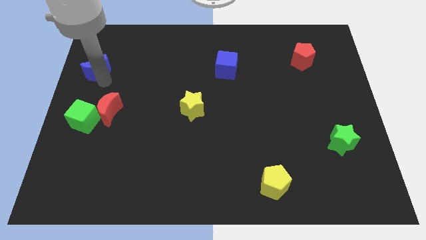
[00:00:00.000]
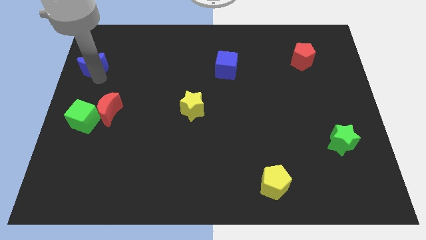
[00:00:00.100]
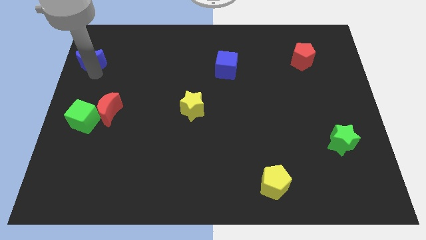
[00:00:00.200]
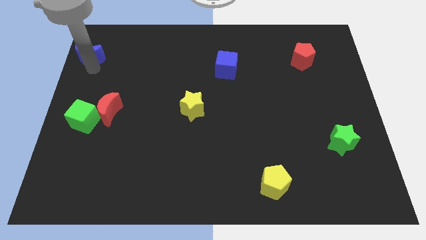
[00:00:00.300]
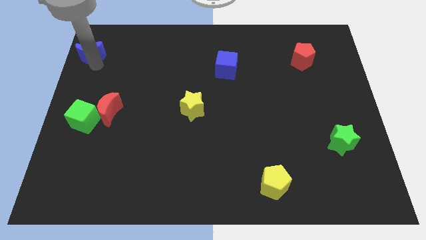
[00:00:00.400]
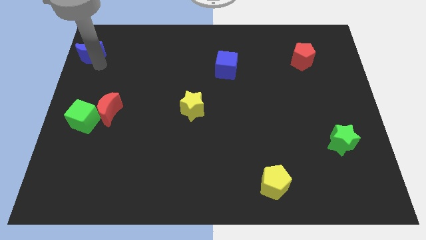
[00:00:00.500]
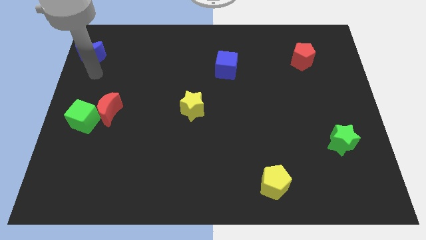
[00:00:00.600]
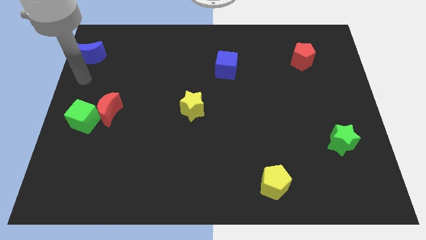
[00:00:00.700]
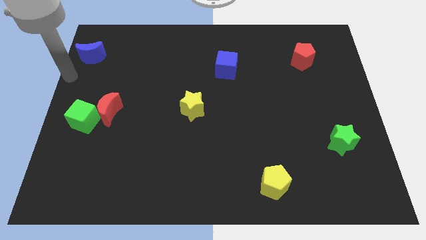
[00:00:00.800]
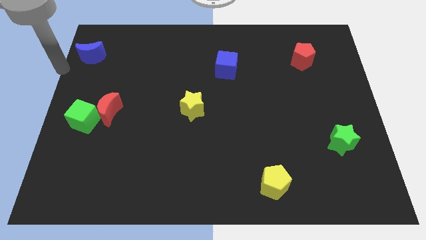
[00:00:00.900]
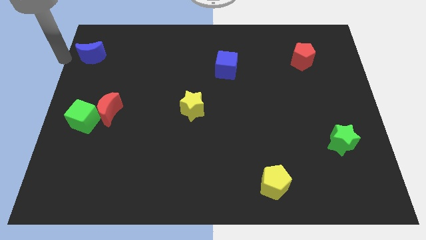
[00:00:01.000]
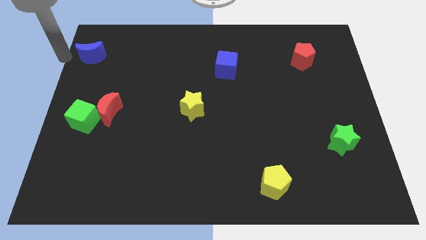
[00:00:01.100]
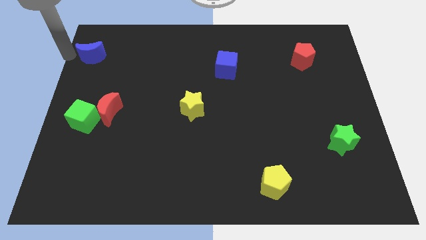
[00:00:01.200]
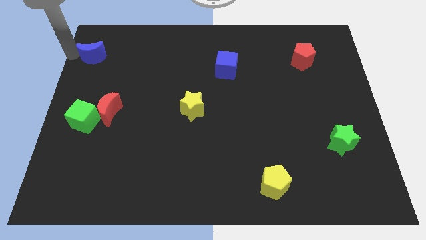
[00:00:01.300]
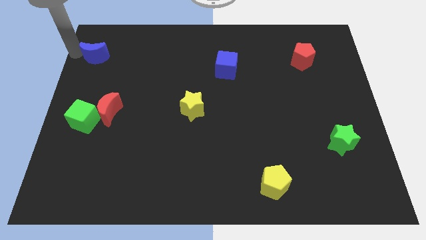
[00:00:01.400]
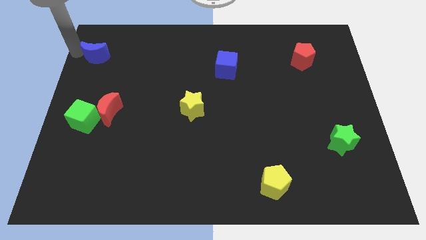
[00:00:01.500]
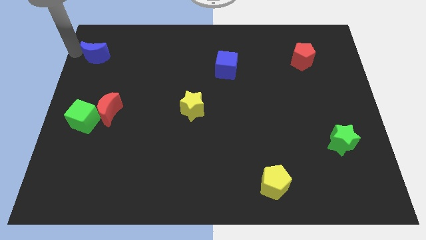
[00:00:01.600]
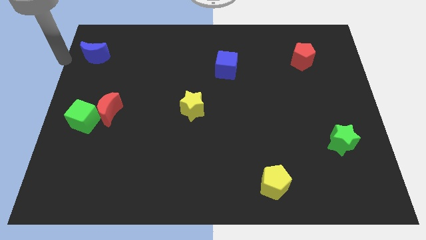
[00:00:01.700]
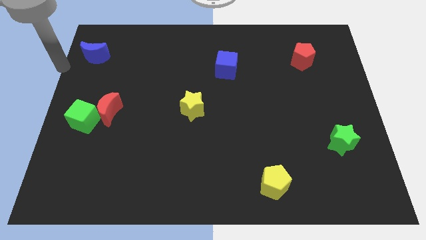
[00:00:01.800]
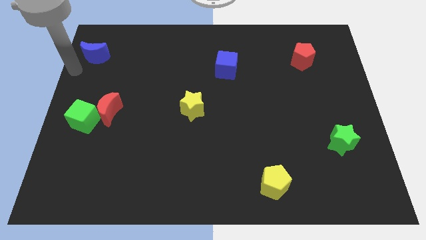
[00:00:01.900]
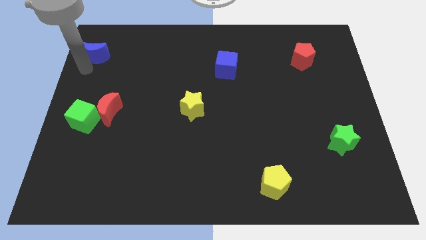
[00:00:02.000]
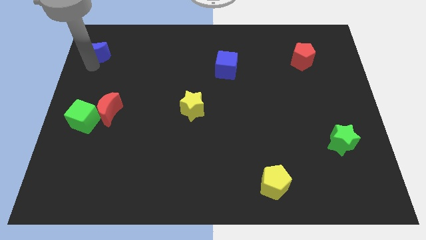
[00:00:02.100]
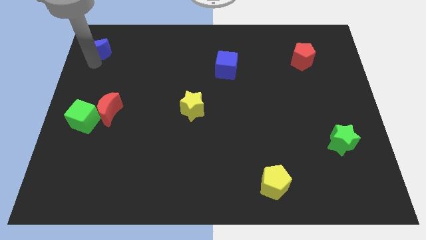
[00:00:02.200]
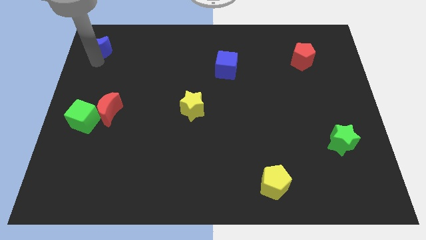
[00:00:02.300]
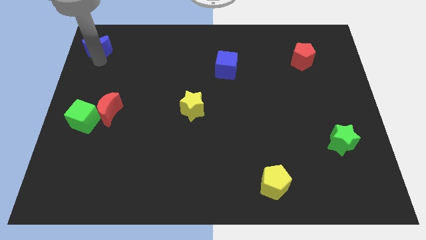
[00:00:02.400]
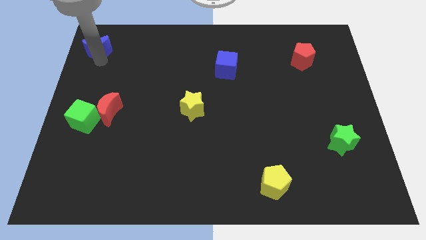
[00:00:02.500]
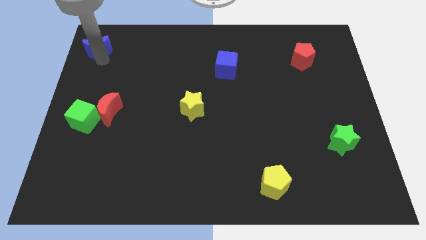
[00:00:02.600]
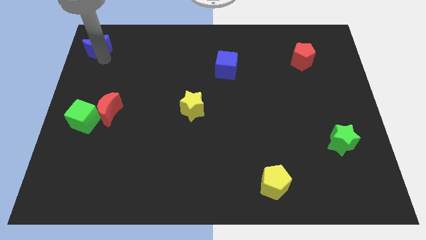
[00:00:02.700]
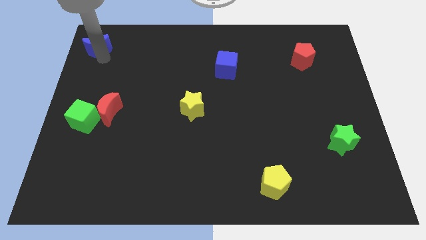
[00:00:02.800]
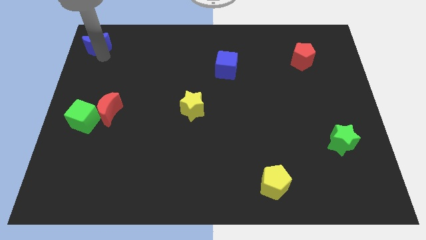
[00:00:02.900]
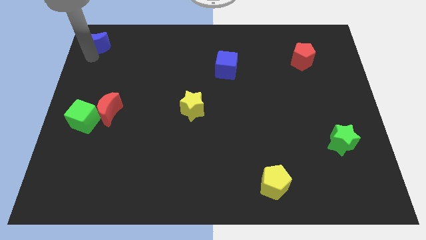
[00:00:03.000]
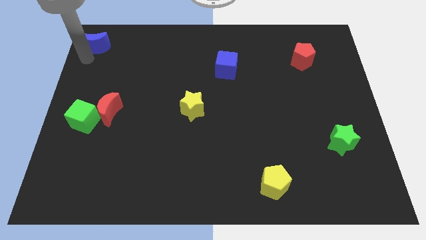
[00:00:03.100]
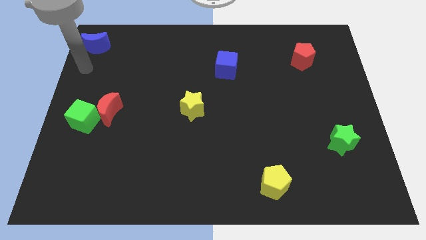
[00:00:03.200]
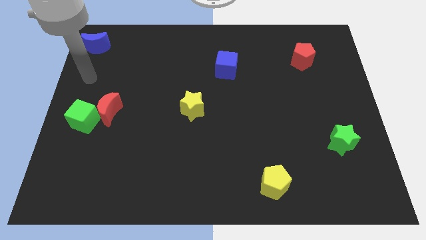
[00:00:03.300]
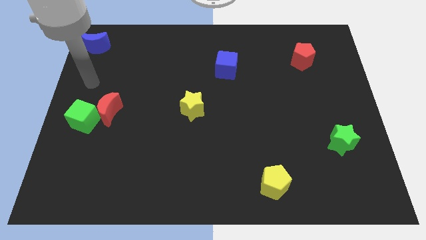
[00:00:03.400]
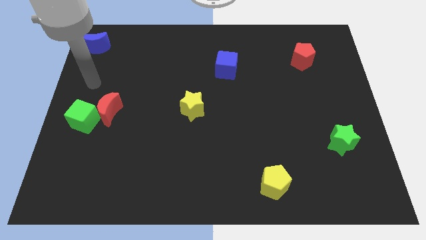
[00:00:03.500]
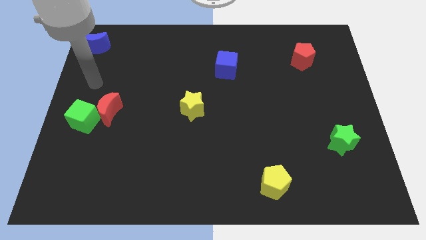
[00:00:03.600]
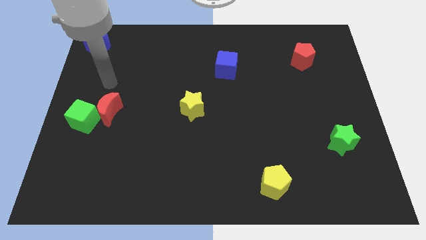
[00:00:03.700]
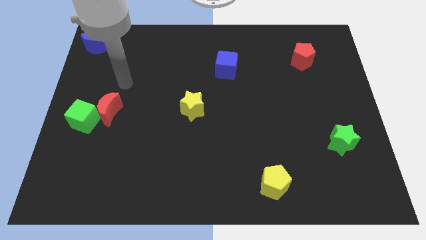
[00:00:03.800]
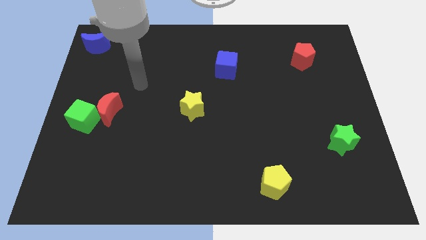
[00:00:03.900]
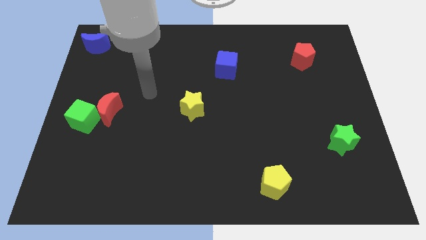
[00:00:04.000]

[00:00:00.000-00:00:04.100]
slide blue moon towards top left

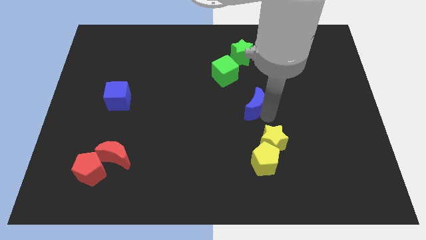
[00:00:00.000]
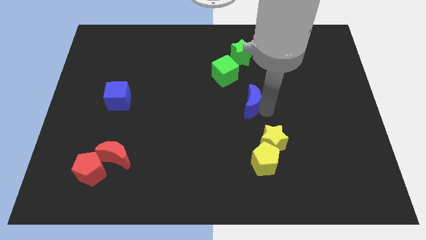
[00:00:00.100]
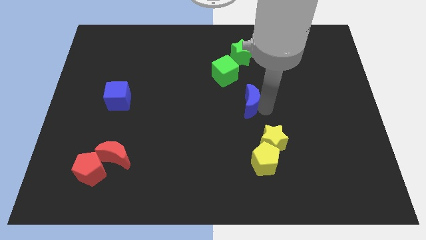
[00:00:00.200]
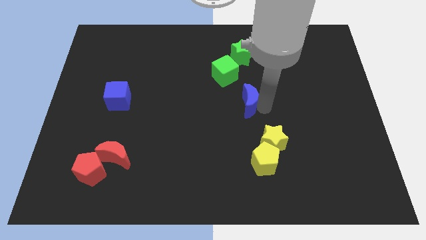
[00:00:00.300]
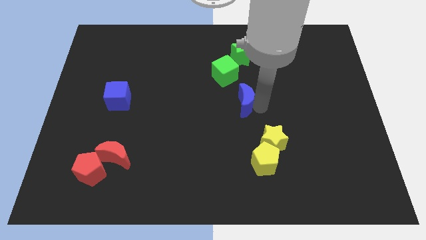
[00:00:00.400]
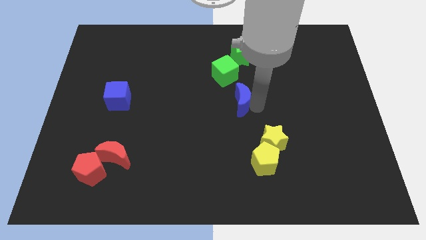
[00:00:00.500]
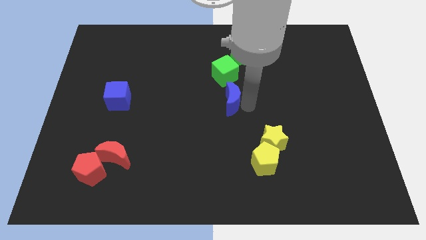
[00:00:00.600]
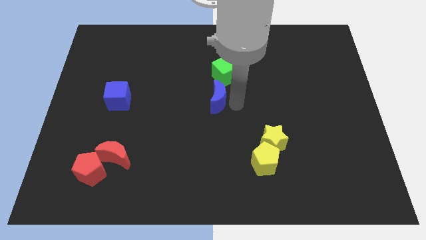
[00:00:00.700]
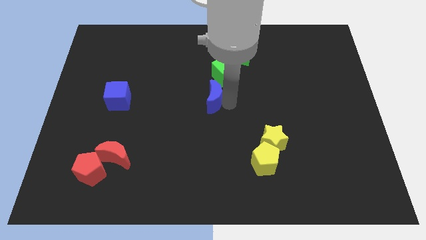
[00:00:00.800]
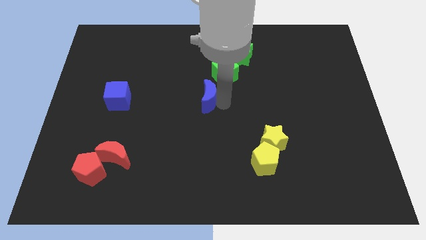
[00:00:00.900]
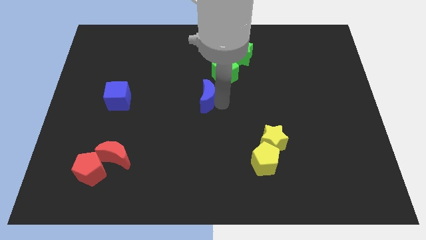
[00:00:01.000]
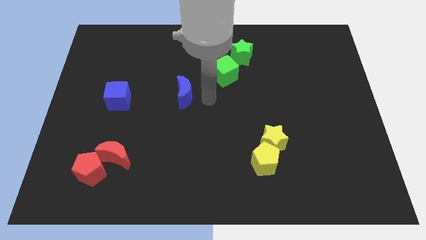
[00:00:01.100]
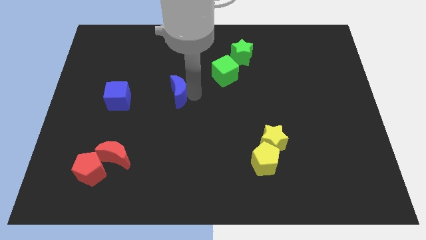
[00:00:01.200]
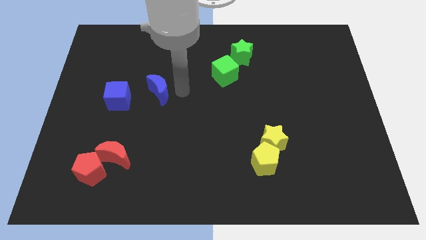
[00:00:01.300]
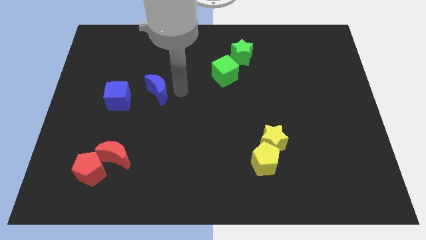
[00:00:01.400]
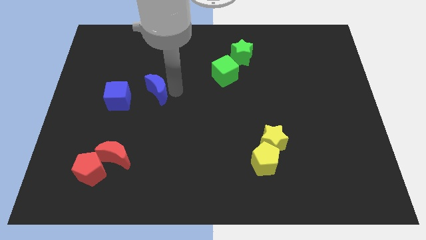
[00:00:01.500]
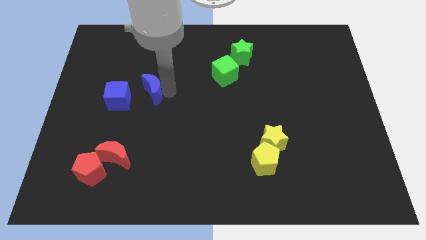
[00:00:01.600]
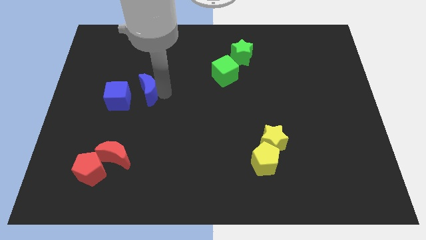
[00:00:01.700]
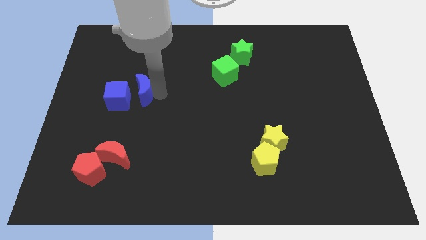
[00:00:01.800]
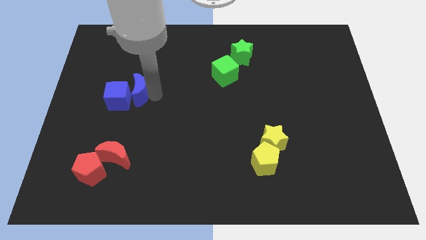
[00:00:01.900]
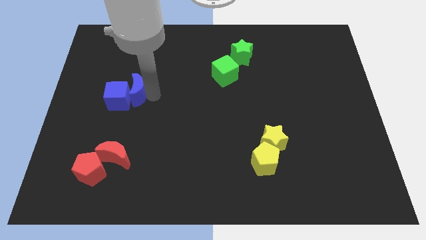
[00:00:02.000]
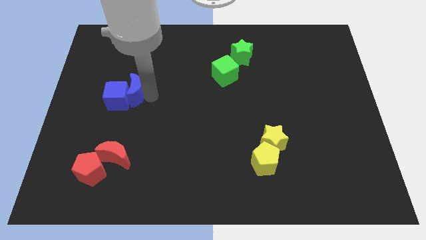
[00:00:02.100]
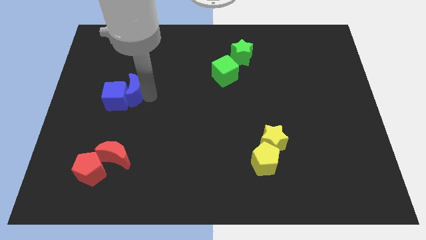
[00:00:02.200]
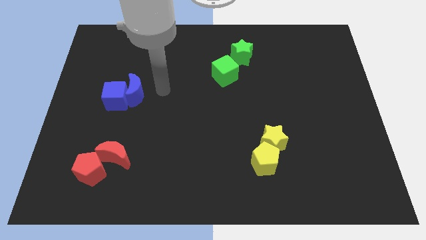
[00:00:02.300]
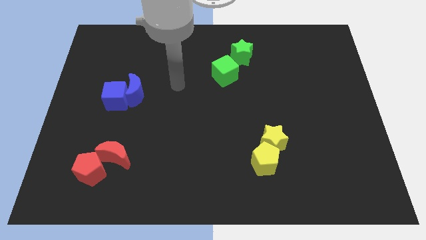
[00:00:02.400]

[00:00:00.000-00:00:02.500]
push blue crescent in to blue cube

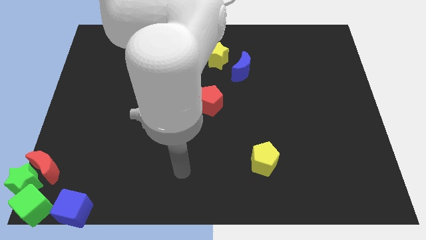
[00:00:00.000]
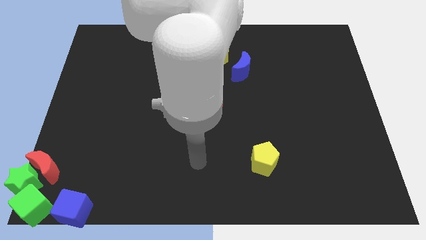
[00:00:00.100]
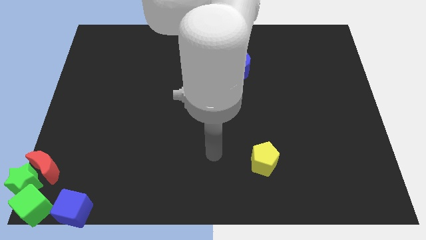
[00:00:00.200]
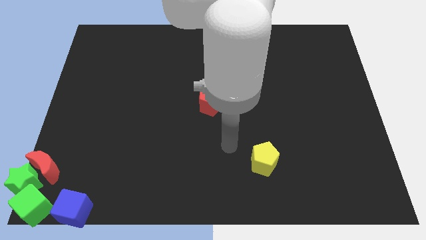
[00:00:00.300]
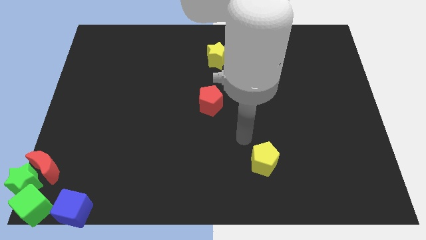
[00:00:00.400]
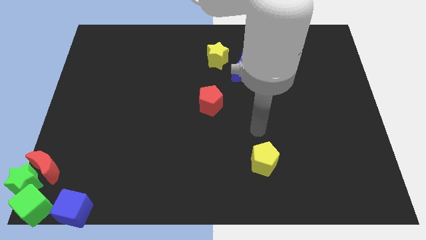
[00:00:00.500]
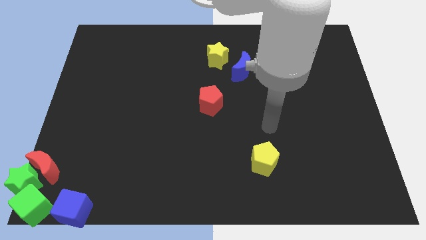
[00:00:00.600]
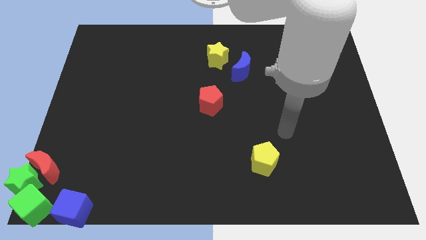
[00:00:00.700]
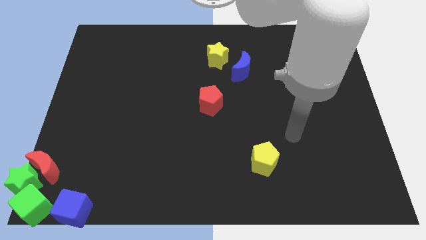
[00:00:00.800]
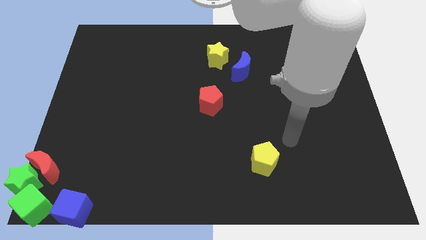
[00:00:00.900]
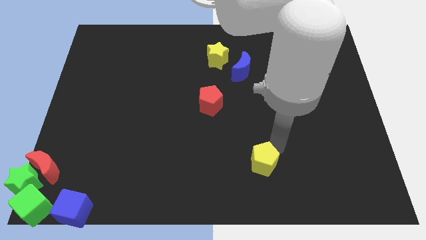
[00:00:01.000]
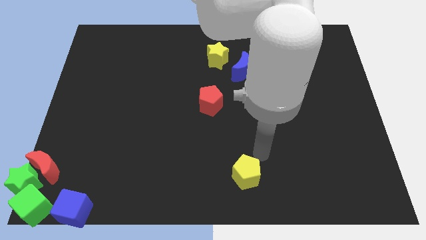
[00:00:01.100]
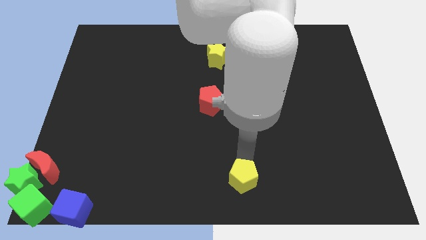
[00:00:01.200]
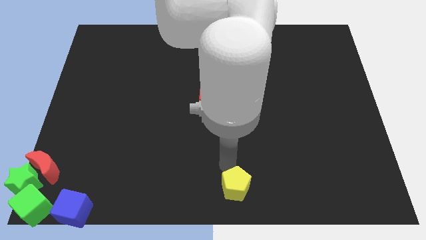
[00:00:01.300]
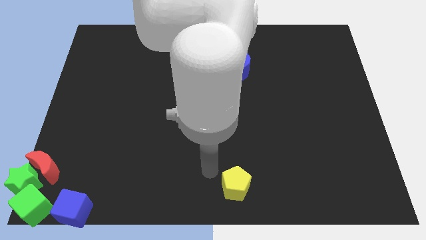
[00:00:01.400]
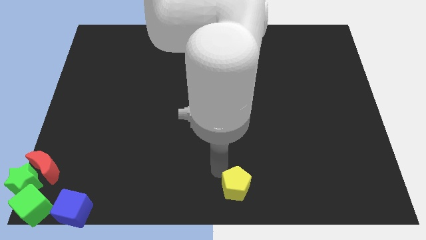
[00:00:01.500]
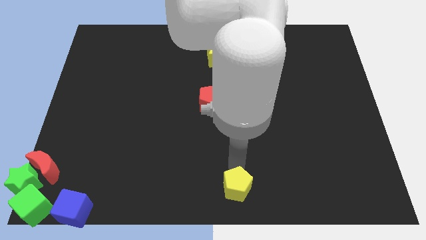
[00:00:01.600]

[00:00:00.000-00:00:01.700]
push yellow pentagon towards the bottom center of the board

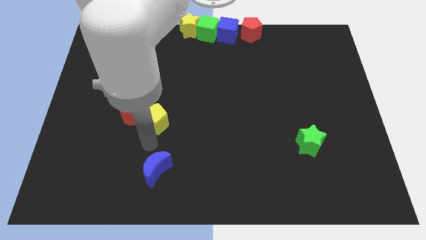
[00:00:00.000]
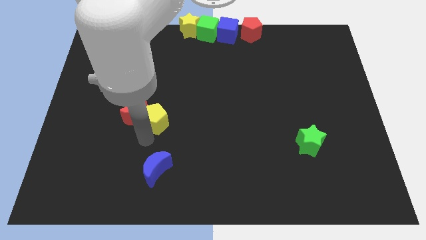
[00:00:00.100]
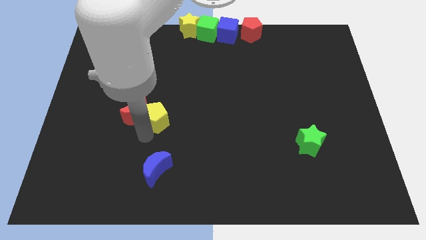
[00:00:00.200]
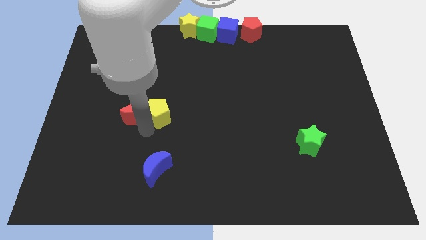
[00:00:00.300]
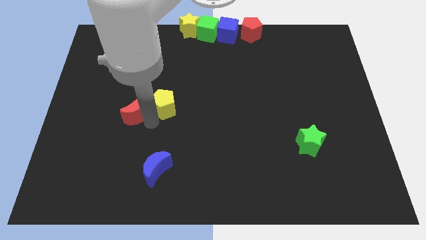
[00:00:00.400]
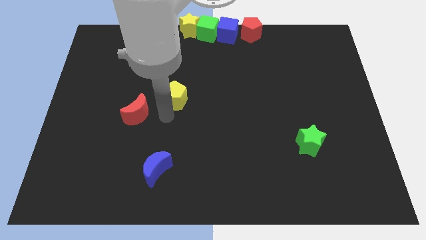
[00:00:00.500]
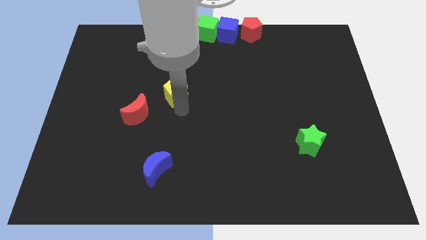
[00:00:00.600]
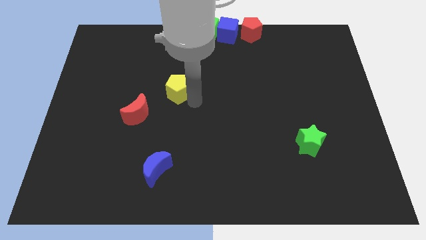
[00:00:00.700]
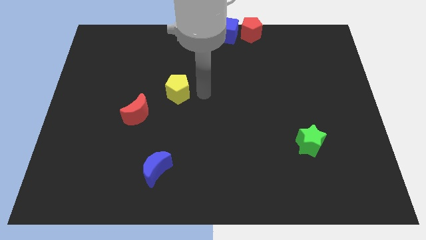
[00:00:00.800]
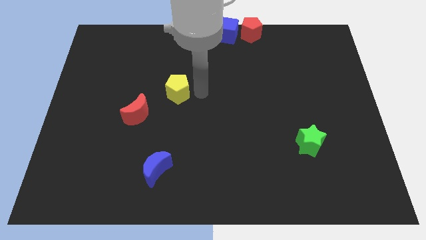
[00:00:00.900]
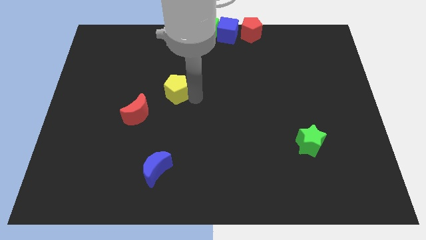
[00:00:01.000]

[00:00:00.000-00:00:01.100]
separate the yellow pentagon from the red crescent
